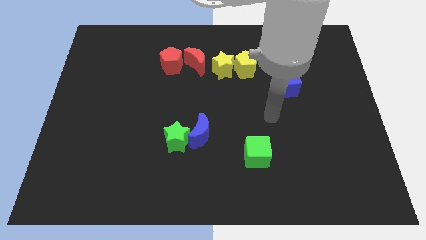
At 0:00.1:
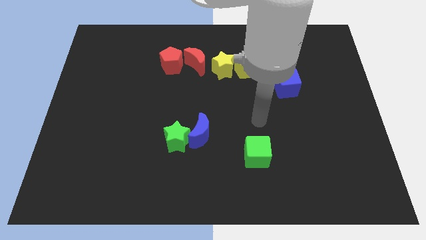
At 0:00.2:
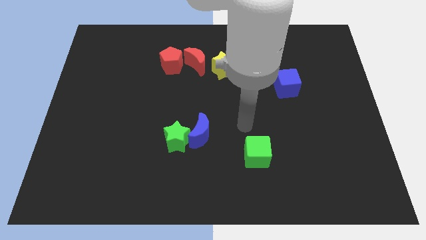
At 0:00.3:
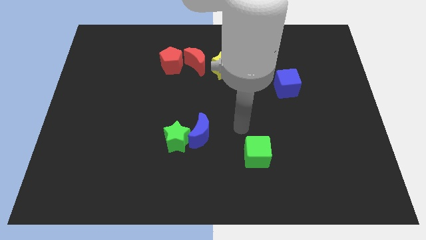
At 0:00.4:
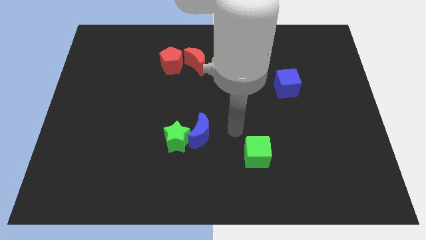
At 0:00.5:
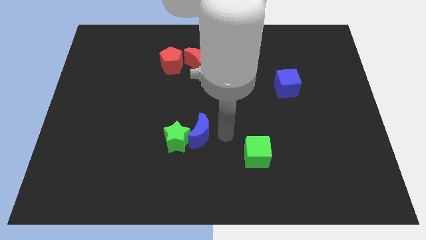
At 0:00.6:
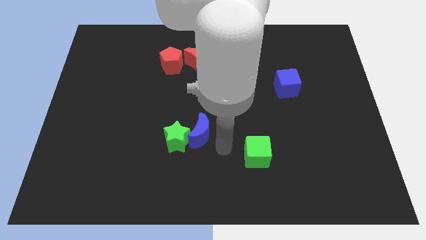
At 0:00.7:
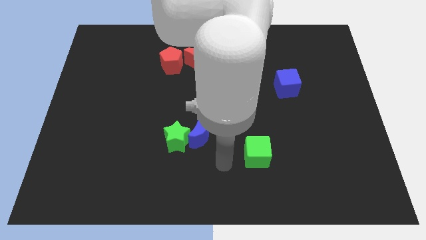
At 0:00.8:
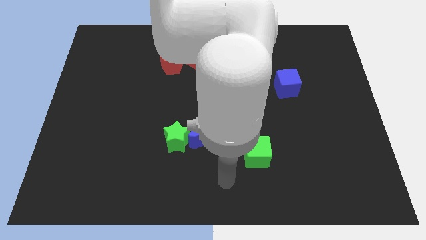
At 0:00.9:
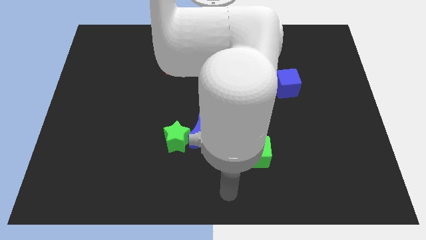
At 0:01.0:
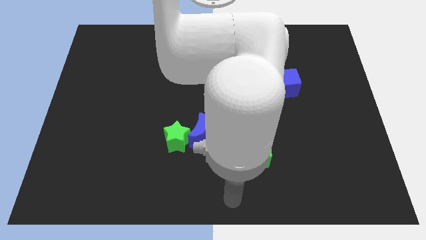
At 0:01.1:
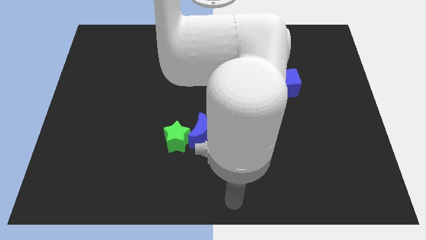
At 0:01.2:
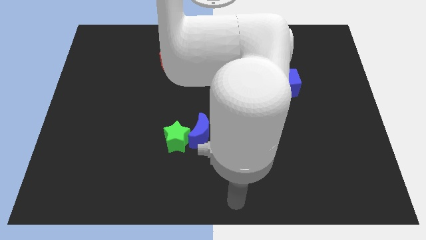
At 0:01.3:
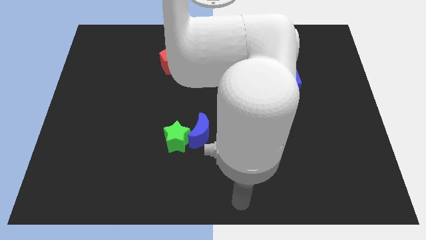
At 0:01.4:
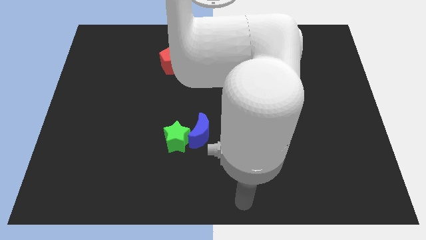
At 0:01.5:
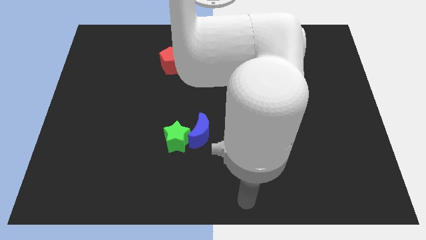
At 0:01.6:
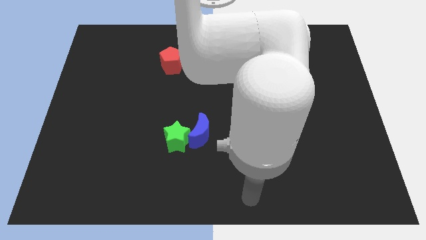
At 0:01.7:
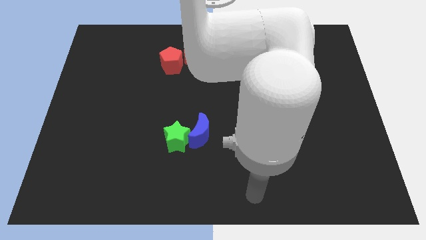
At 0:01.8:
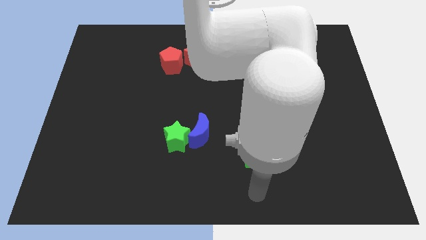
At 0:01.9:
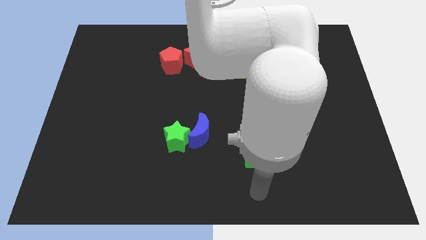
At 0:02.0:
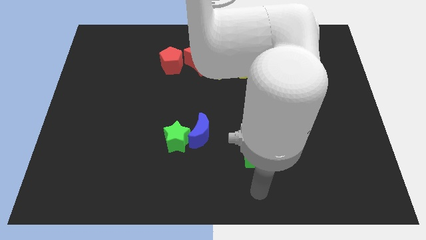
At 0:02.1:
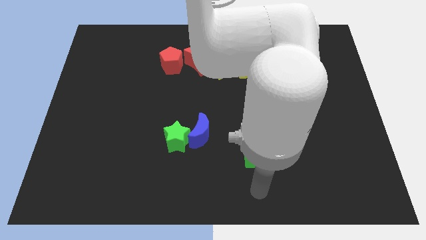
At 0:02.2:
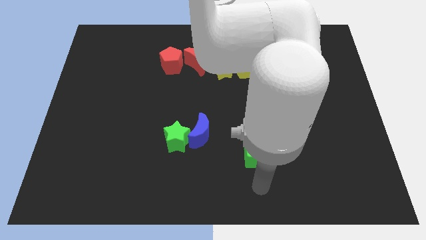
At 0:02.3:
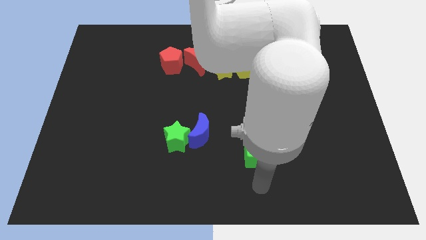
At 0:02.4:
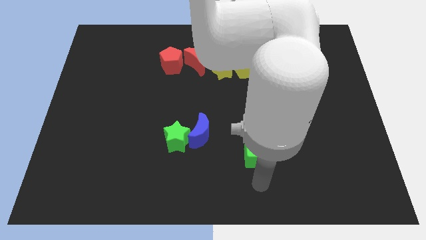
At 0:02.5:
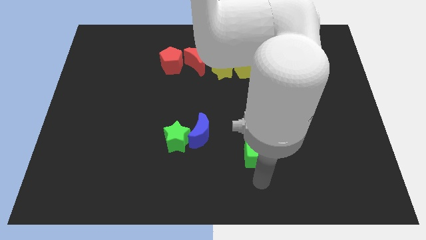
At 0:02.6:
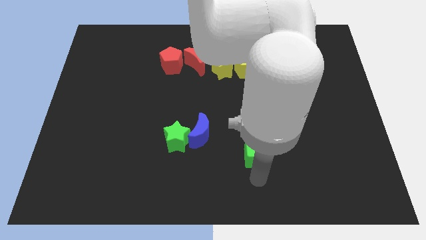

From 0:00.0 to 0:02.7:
place your arm to the bottom of green cube

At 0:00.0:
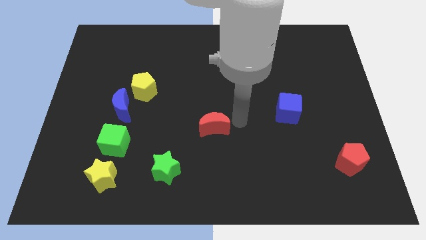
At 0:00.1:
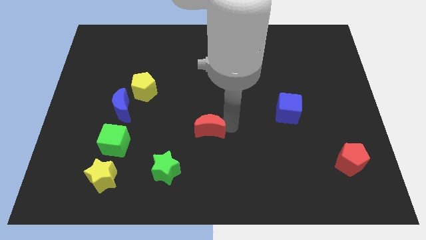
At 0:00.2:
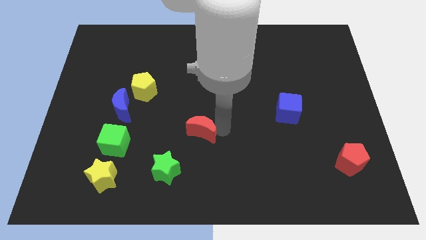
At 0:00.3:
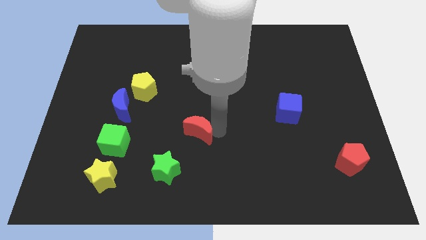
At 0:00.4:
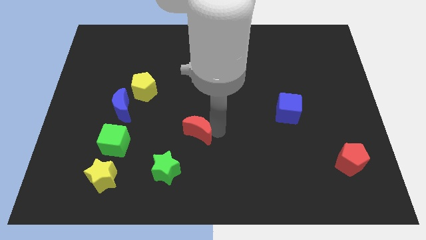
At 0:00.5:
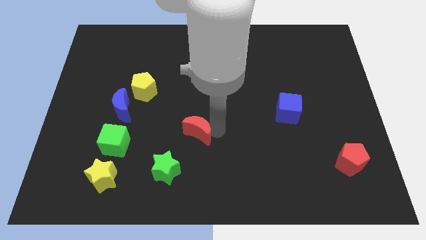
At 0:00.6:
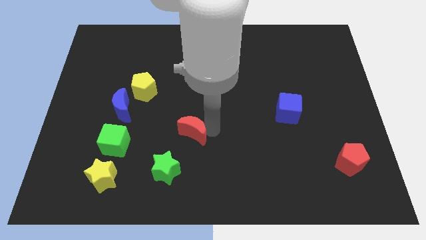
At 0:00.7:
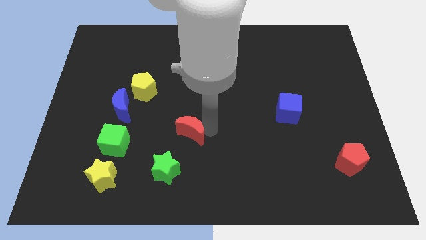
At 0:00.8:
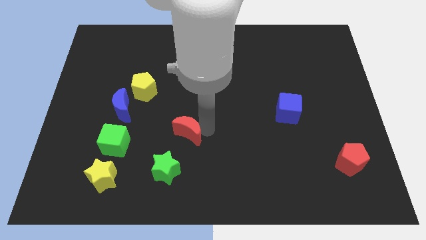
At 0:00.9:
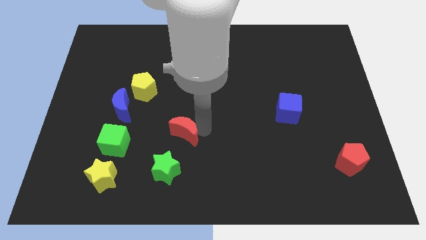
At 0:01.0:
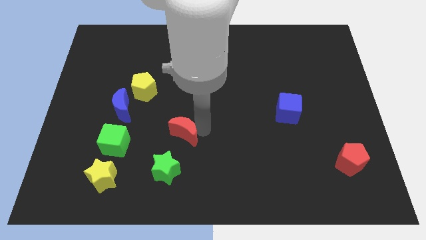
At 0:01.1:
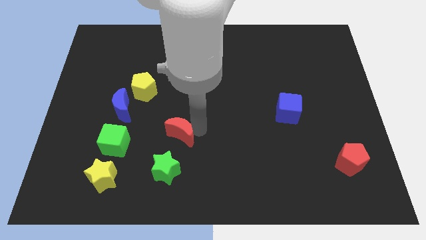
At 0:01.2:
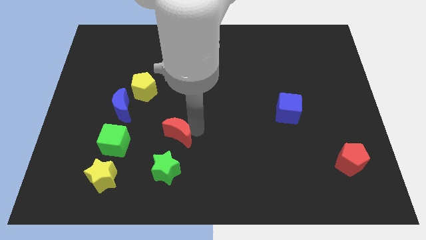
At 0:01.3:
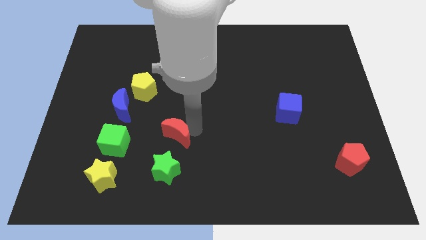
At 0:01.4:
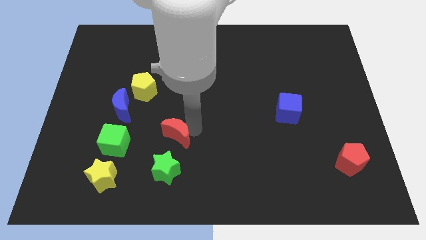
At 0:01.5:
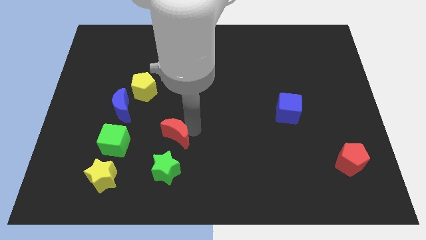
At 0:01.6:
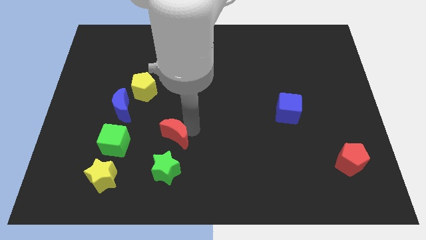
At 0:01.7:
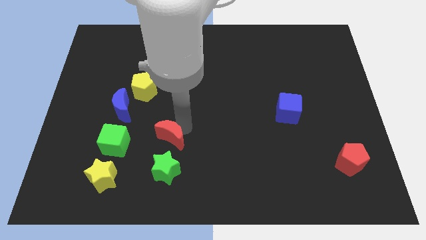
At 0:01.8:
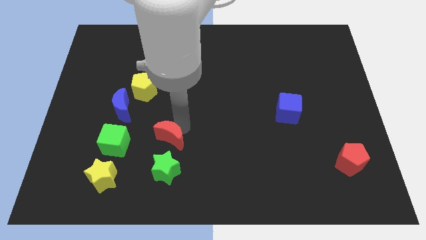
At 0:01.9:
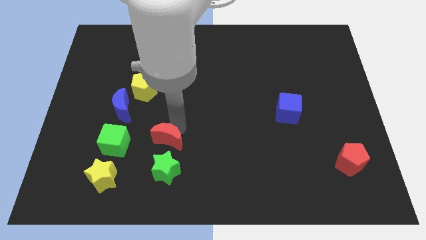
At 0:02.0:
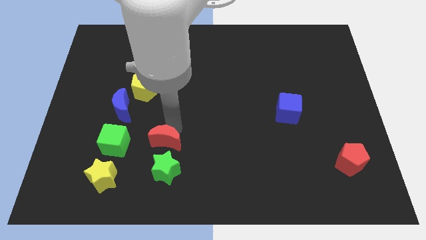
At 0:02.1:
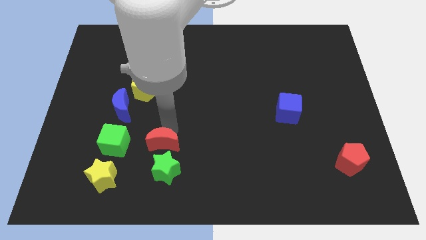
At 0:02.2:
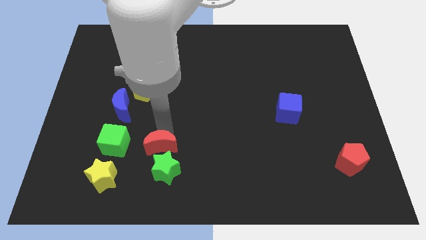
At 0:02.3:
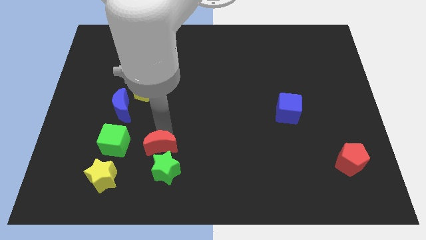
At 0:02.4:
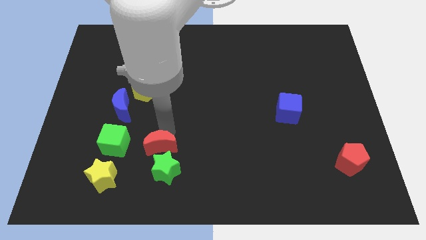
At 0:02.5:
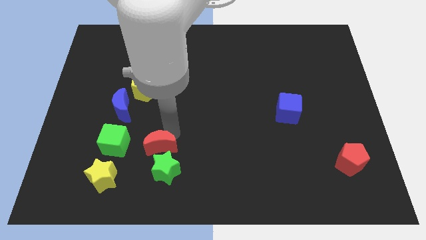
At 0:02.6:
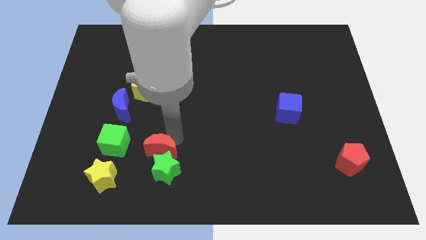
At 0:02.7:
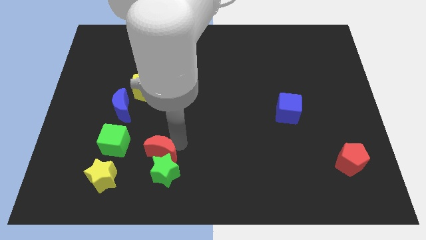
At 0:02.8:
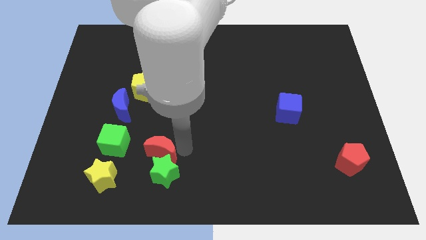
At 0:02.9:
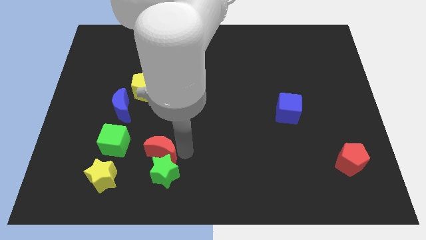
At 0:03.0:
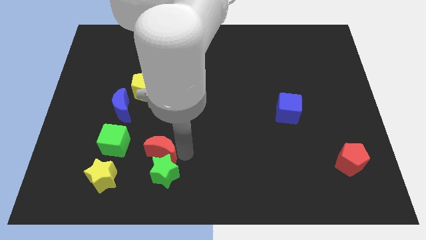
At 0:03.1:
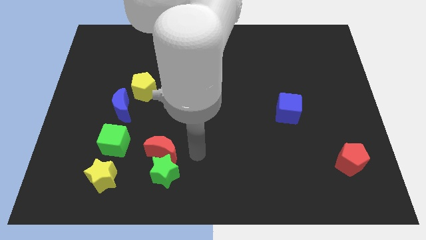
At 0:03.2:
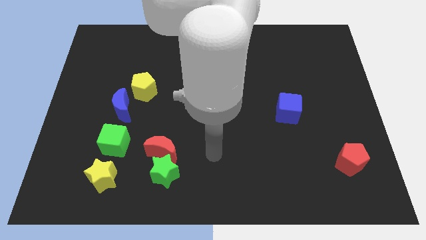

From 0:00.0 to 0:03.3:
place the red moon to the top of green star

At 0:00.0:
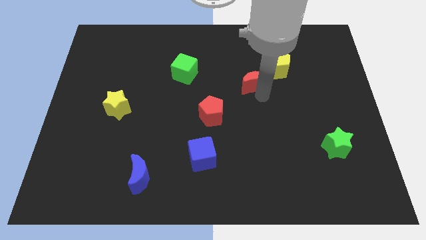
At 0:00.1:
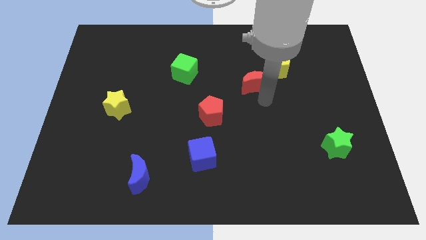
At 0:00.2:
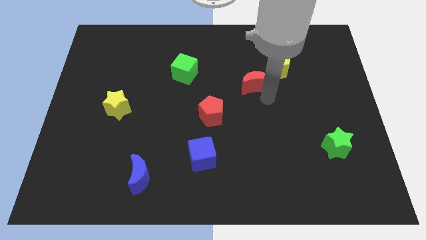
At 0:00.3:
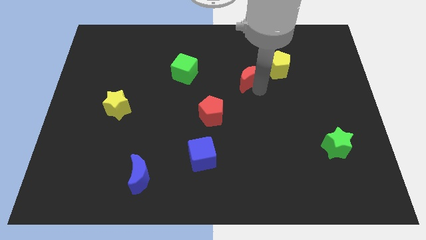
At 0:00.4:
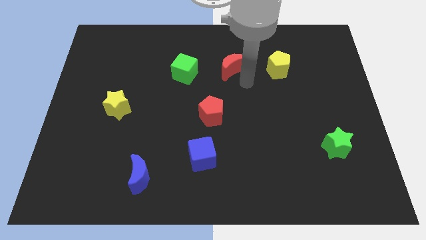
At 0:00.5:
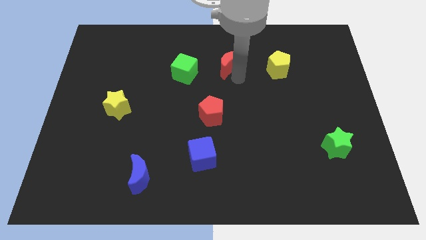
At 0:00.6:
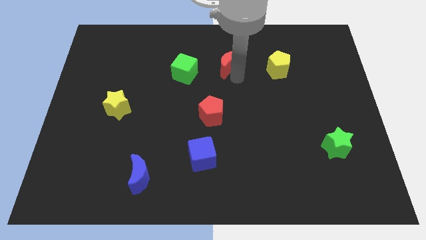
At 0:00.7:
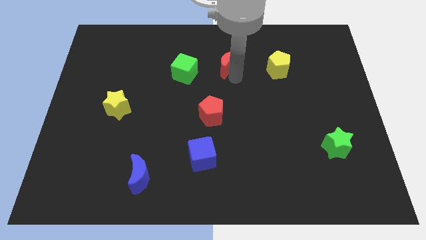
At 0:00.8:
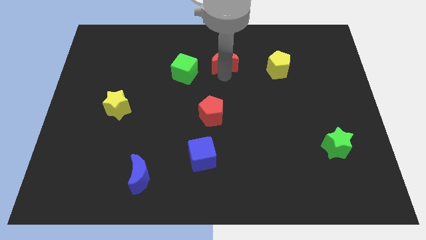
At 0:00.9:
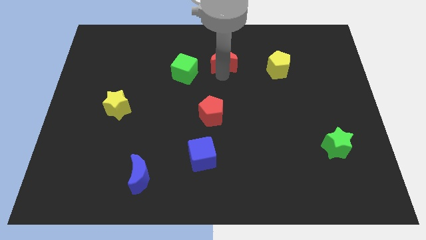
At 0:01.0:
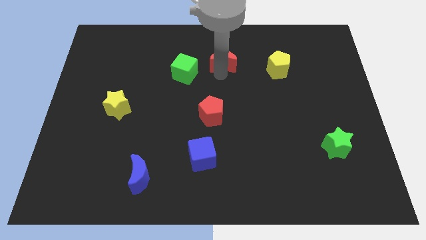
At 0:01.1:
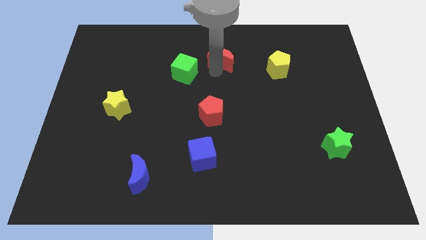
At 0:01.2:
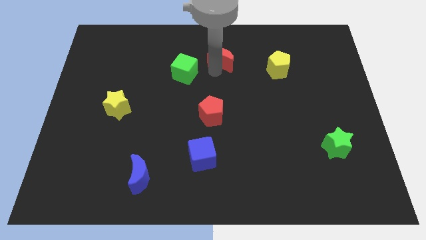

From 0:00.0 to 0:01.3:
move the red crescent to the right of the green cube

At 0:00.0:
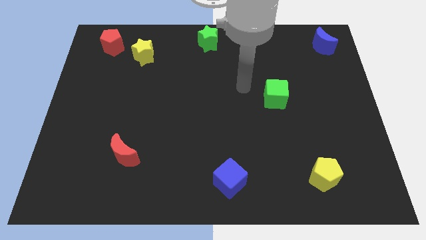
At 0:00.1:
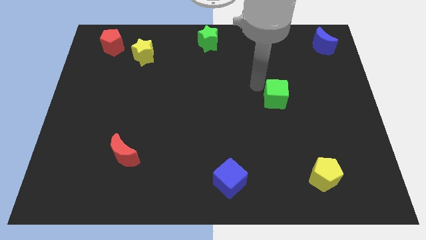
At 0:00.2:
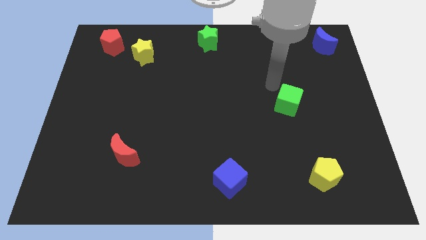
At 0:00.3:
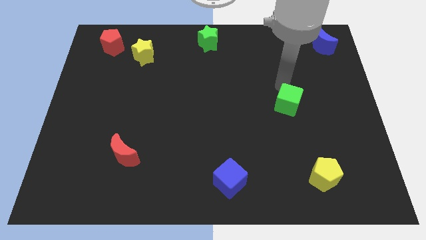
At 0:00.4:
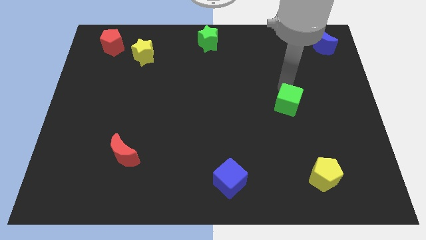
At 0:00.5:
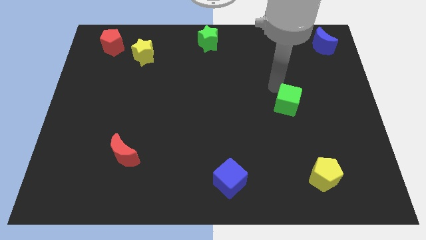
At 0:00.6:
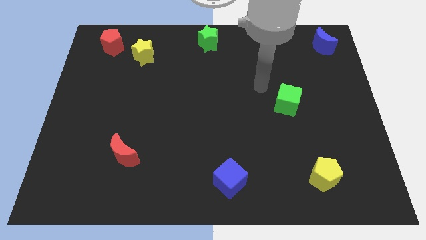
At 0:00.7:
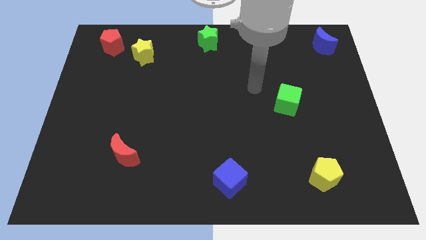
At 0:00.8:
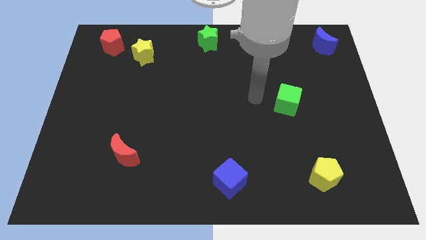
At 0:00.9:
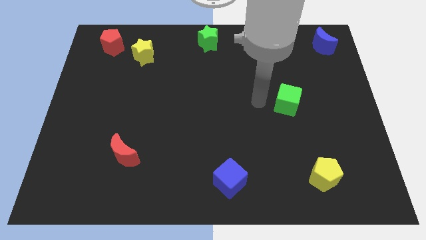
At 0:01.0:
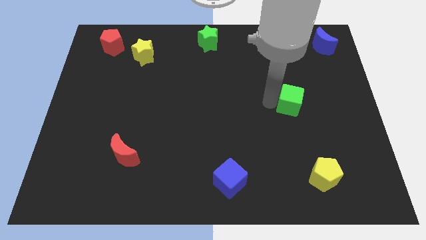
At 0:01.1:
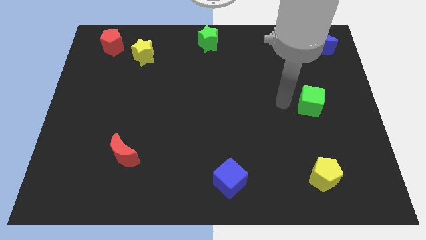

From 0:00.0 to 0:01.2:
place the green cube in between the yellow pentagon and the blue crescent

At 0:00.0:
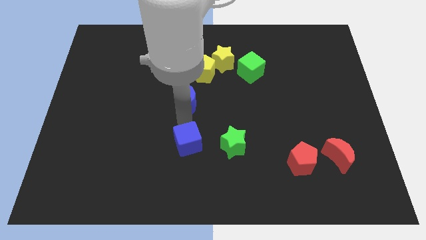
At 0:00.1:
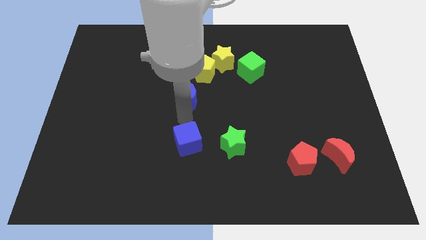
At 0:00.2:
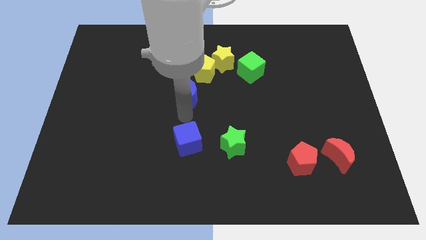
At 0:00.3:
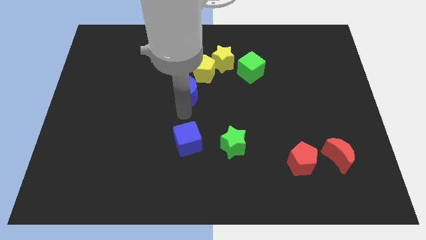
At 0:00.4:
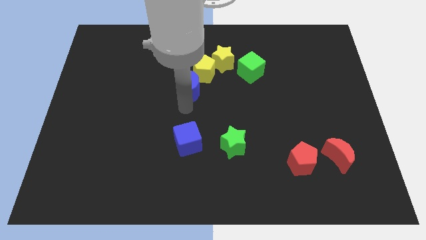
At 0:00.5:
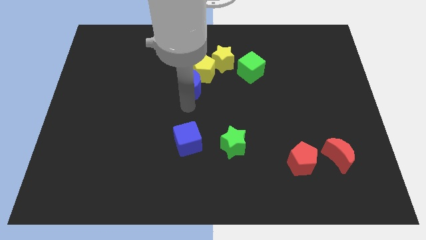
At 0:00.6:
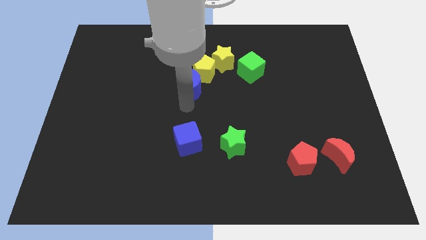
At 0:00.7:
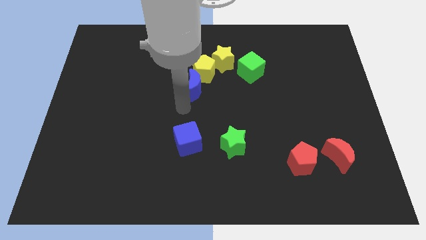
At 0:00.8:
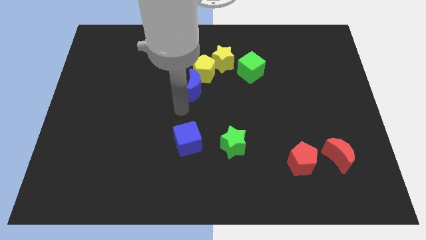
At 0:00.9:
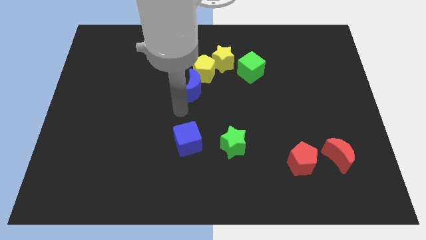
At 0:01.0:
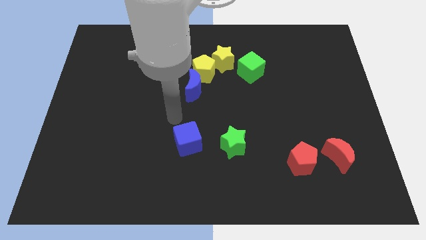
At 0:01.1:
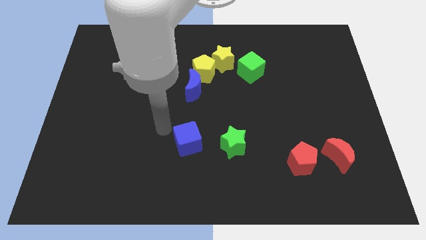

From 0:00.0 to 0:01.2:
move the blue crescent towards the bottom left of the yellow pentagon
